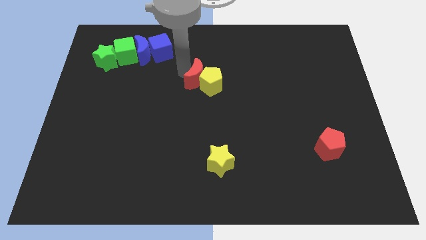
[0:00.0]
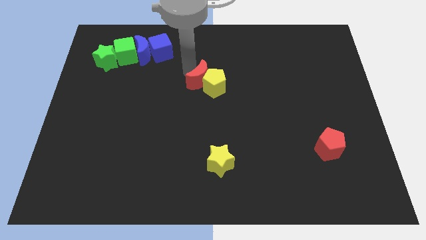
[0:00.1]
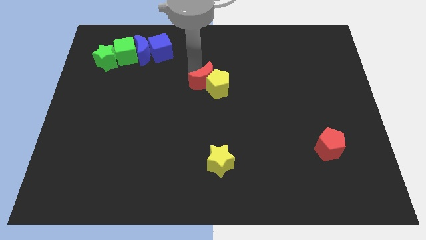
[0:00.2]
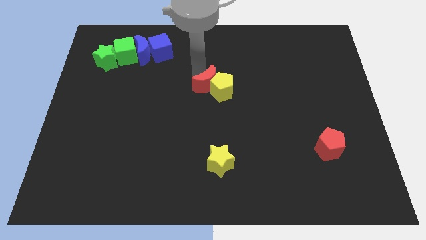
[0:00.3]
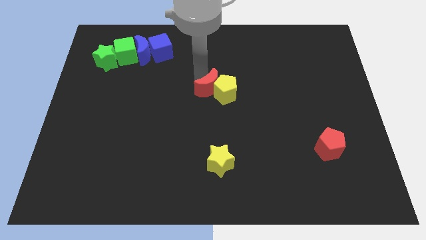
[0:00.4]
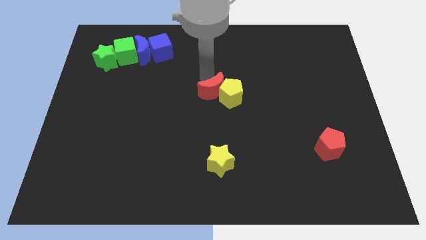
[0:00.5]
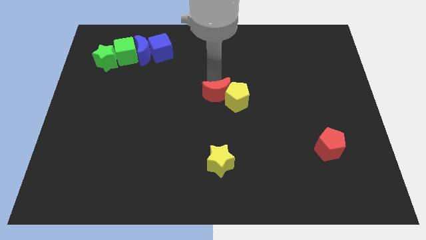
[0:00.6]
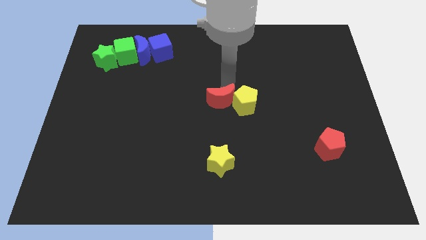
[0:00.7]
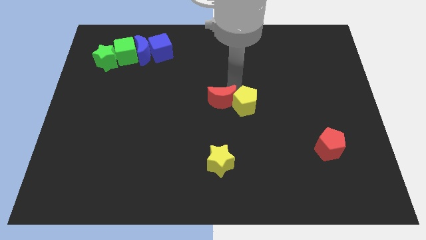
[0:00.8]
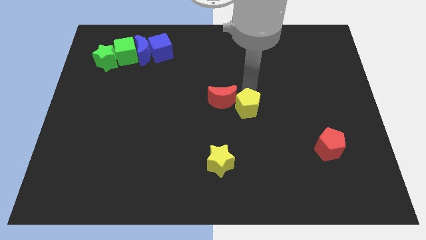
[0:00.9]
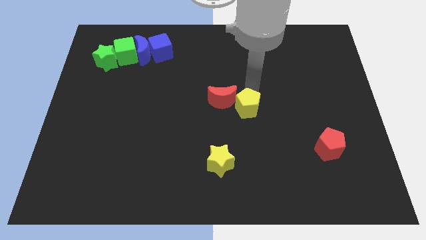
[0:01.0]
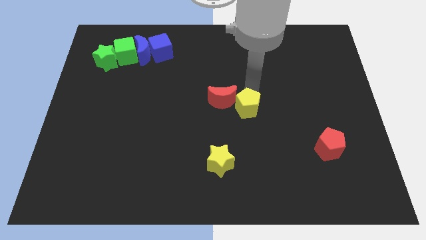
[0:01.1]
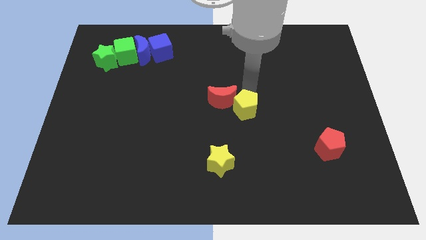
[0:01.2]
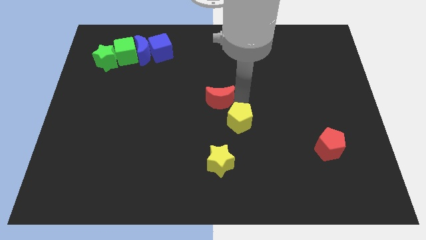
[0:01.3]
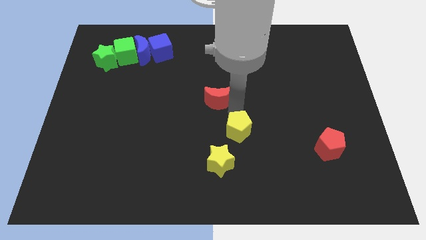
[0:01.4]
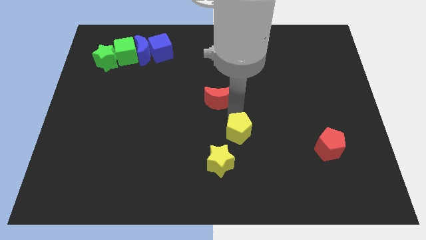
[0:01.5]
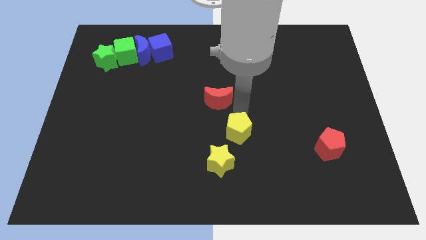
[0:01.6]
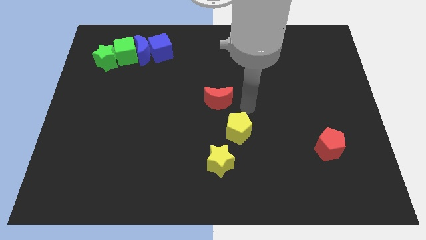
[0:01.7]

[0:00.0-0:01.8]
move the yellow pentagon towards the top right side of the yellow star

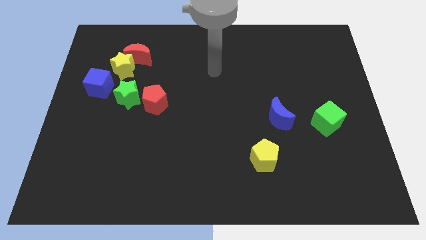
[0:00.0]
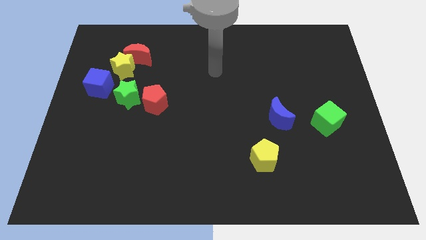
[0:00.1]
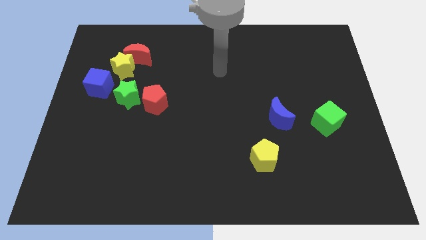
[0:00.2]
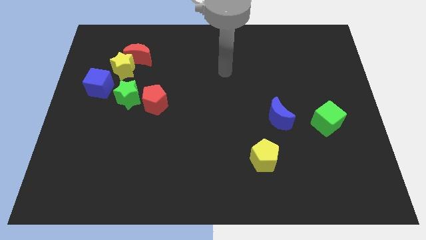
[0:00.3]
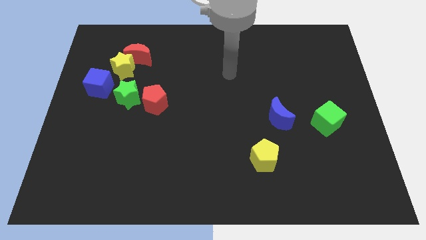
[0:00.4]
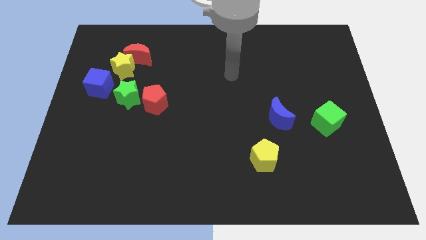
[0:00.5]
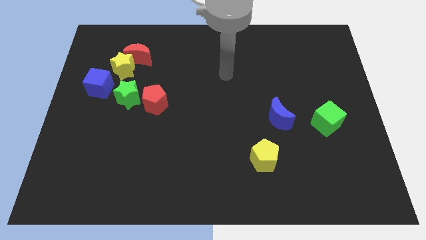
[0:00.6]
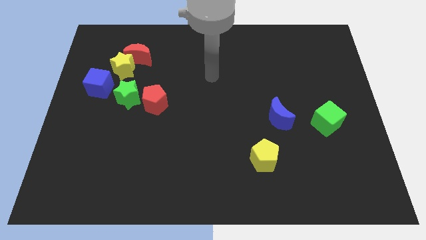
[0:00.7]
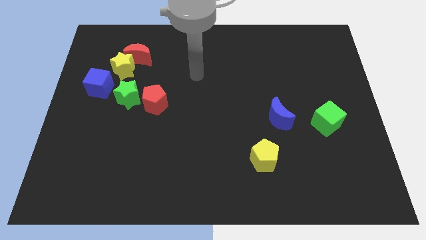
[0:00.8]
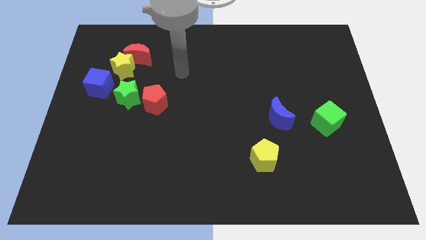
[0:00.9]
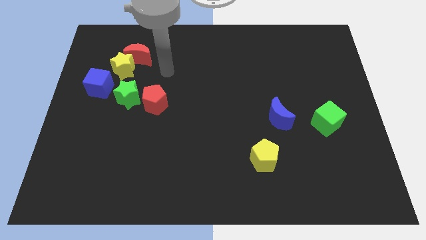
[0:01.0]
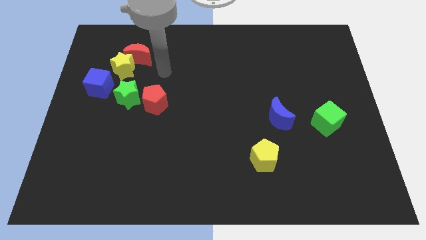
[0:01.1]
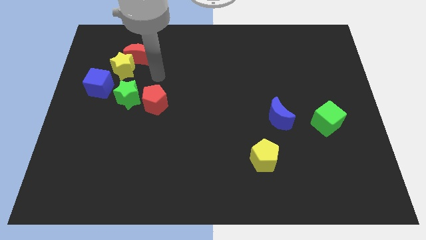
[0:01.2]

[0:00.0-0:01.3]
point your hand at the top side of the red pentagon

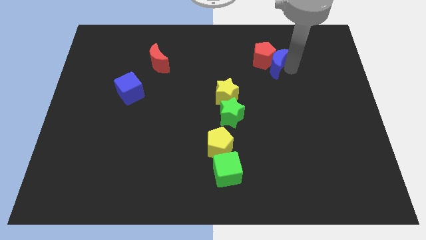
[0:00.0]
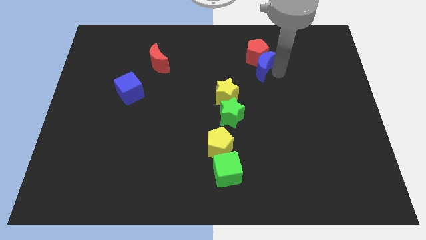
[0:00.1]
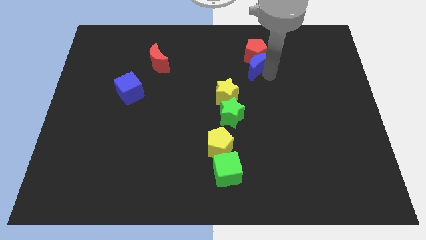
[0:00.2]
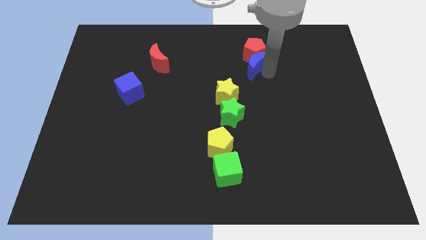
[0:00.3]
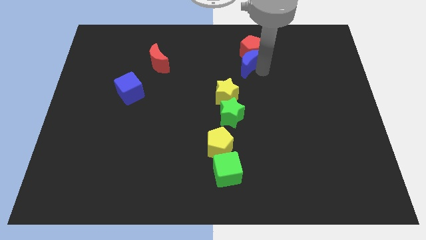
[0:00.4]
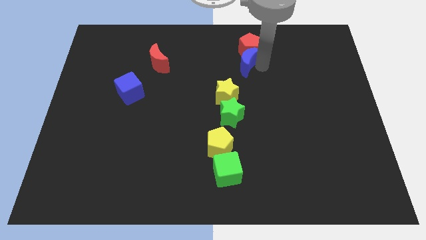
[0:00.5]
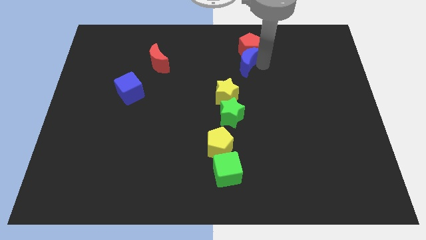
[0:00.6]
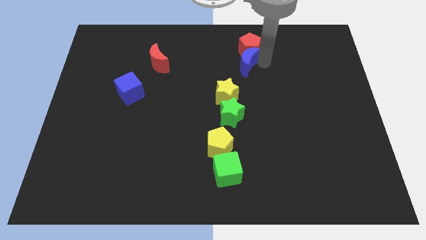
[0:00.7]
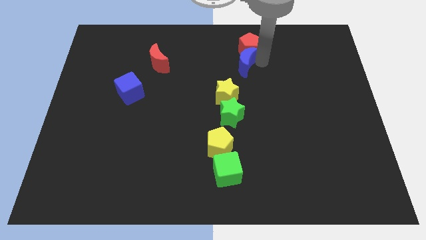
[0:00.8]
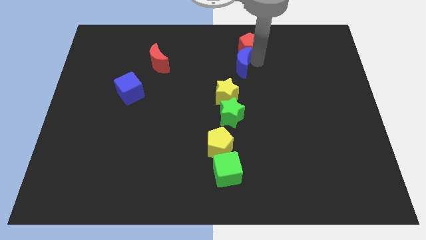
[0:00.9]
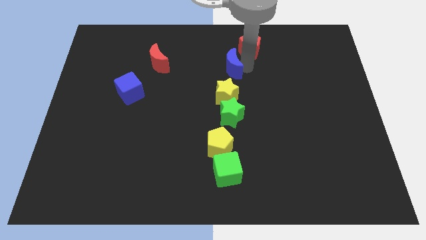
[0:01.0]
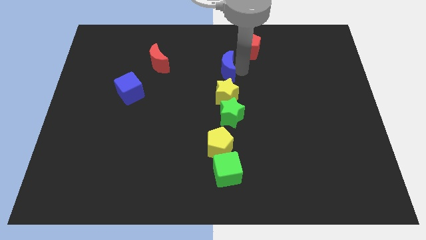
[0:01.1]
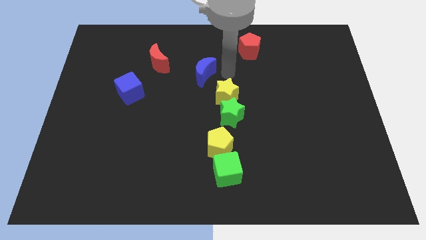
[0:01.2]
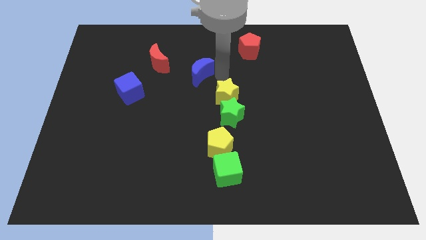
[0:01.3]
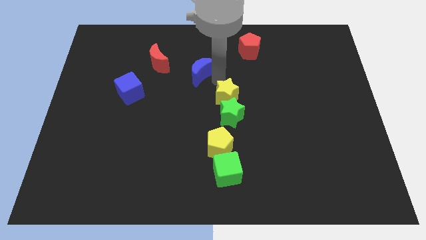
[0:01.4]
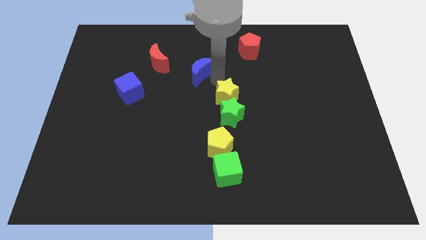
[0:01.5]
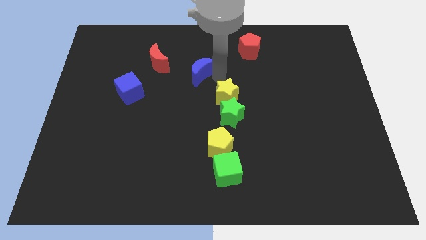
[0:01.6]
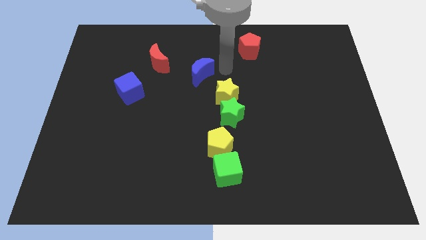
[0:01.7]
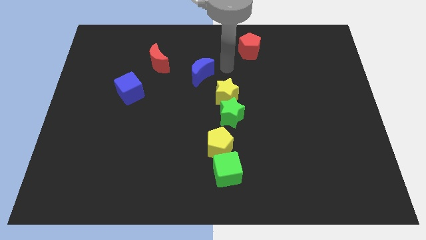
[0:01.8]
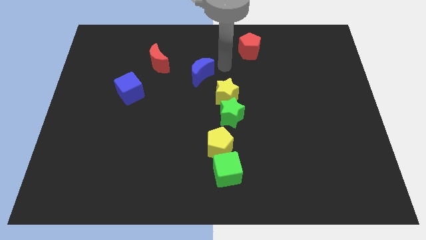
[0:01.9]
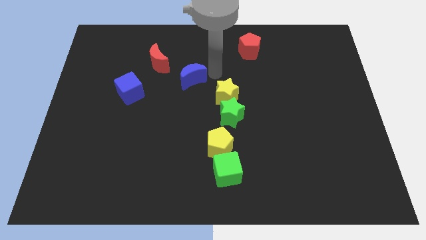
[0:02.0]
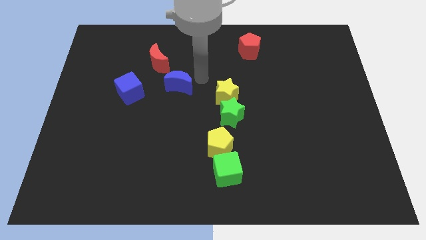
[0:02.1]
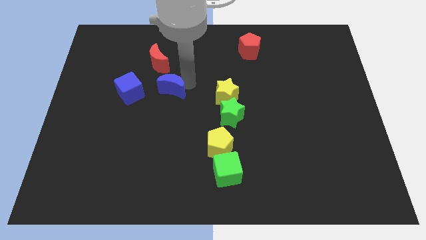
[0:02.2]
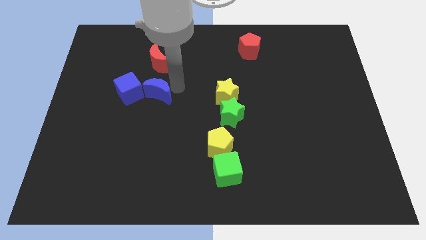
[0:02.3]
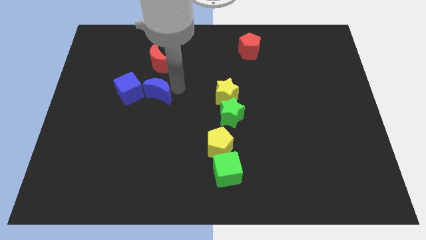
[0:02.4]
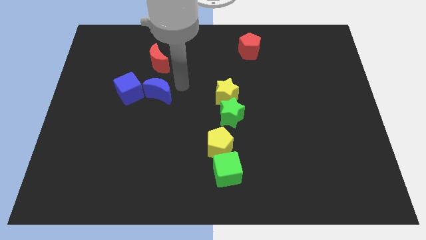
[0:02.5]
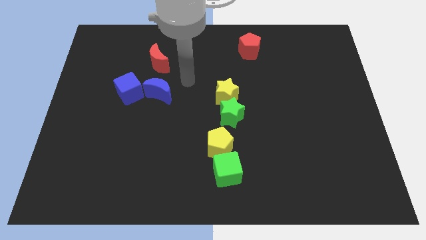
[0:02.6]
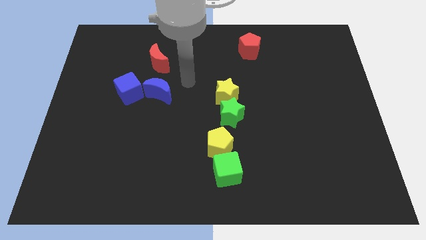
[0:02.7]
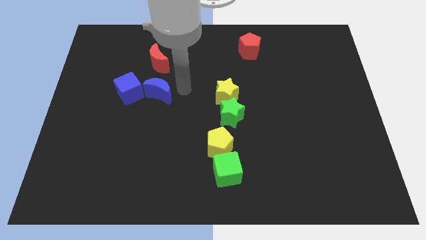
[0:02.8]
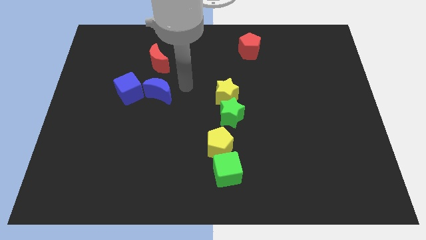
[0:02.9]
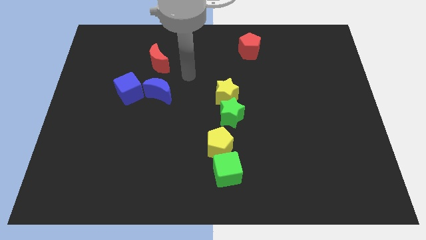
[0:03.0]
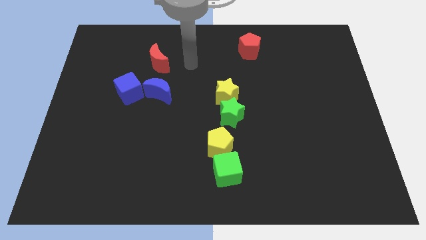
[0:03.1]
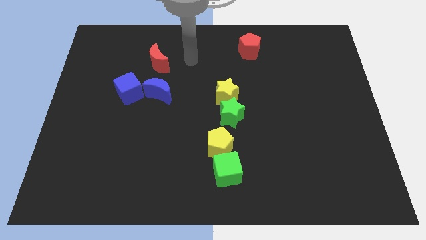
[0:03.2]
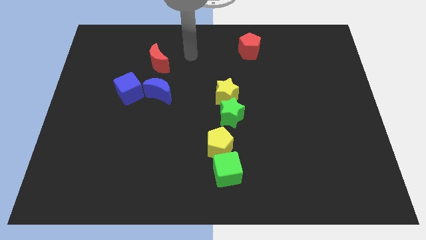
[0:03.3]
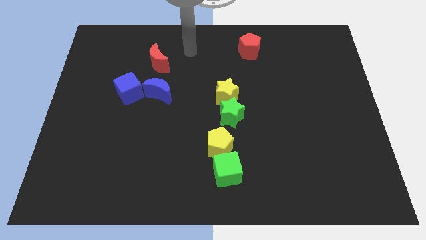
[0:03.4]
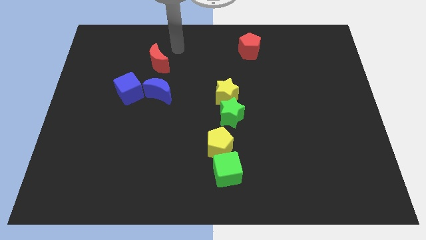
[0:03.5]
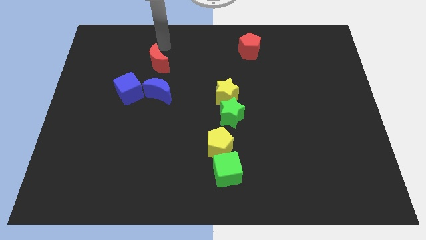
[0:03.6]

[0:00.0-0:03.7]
move the blue moon to the right of the blue cube

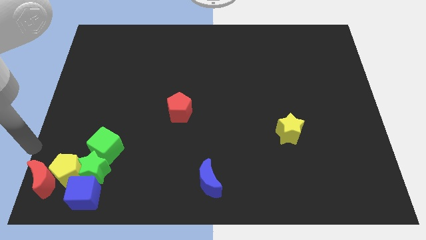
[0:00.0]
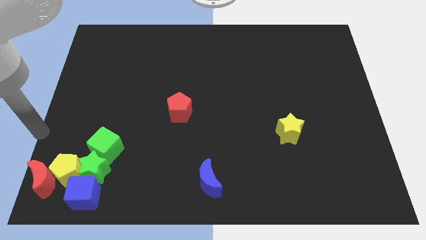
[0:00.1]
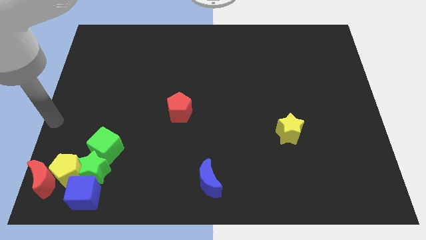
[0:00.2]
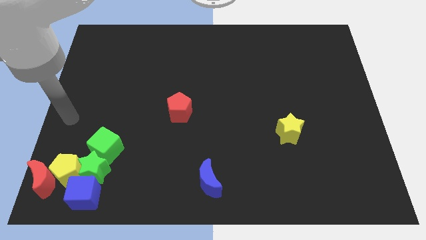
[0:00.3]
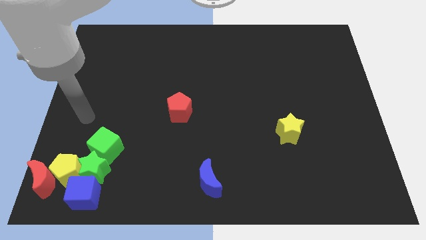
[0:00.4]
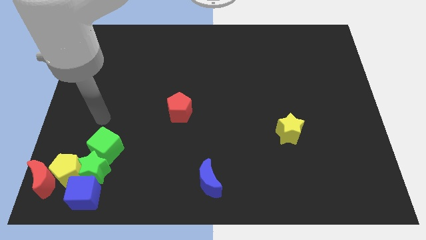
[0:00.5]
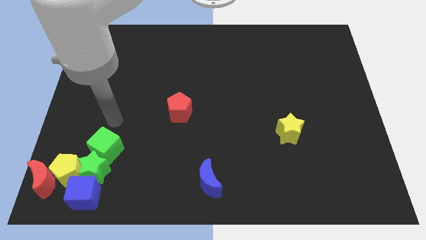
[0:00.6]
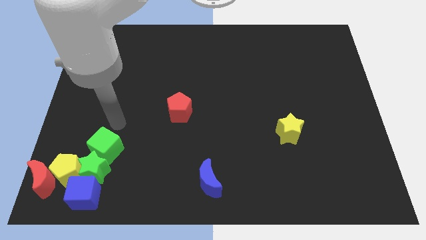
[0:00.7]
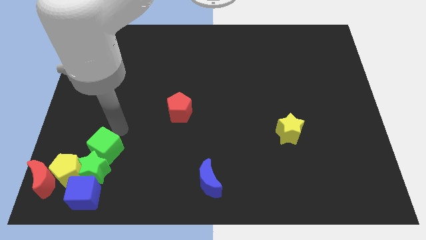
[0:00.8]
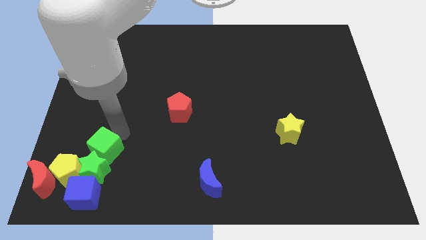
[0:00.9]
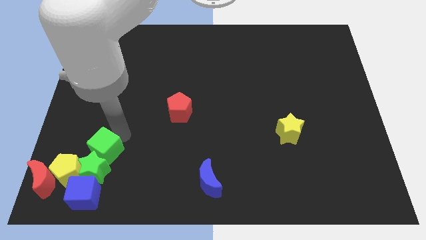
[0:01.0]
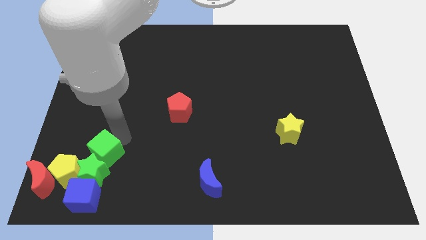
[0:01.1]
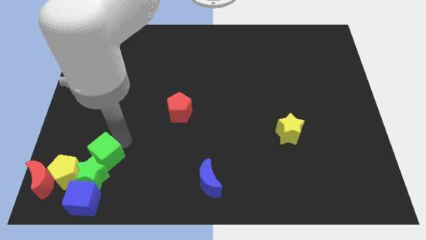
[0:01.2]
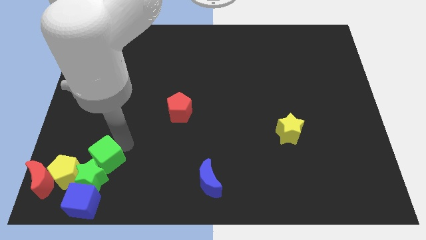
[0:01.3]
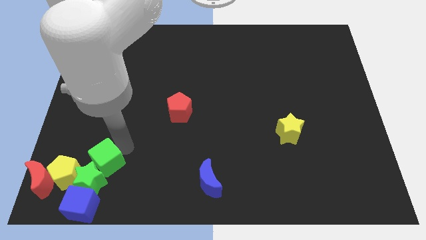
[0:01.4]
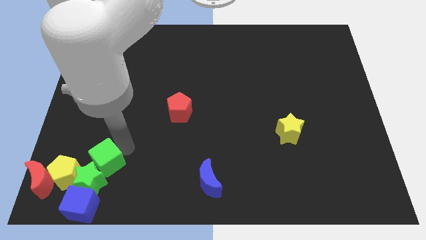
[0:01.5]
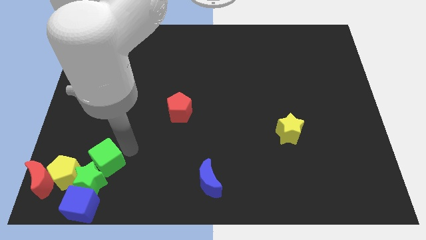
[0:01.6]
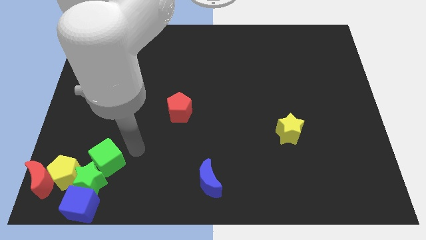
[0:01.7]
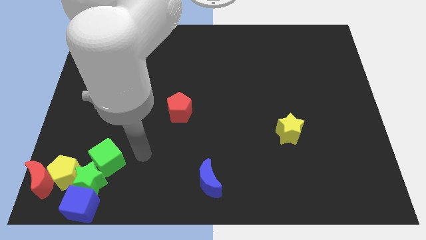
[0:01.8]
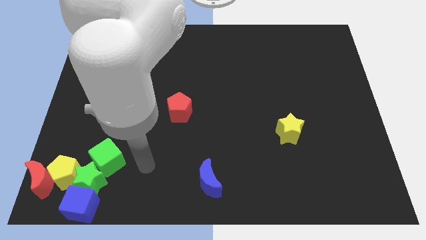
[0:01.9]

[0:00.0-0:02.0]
push the green cube slightly down

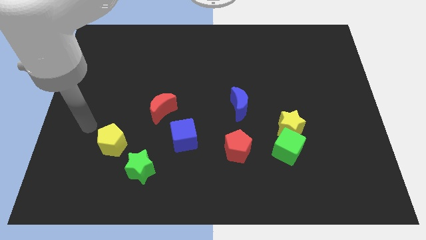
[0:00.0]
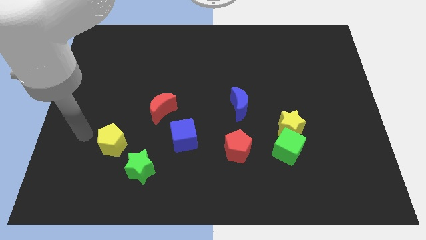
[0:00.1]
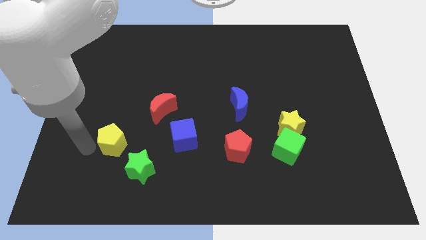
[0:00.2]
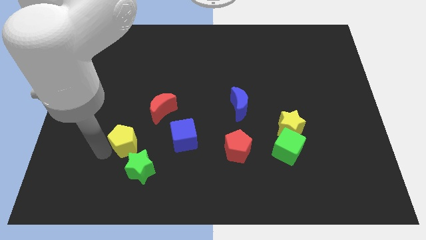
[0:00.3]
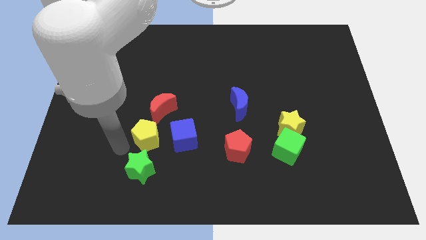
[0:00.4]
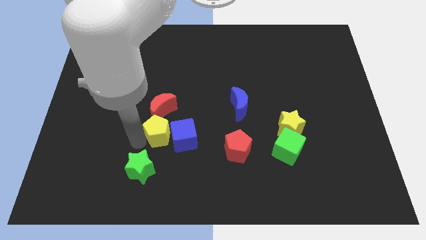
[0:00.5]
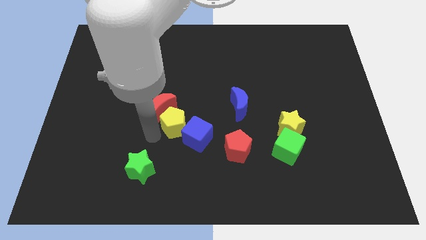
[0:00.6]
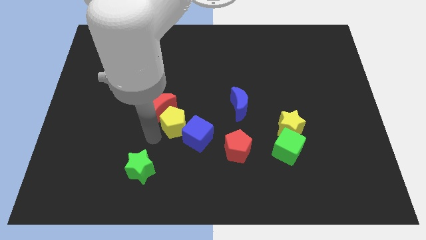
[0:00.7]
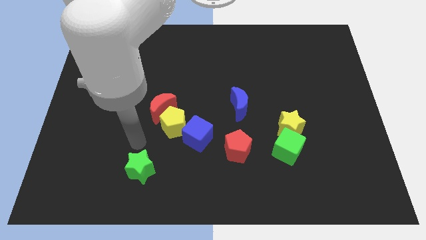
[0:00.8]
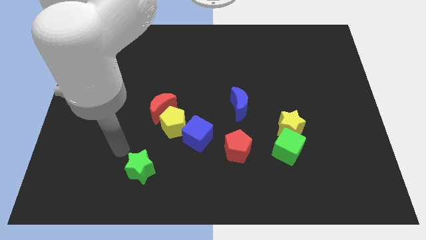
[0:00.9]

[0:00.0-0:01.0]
push the yellow pentagon into the blue cube
